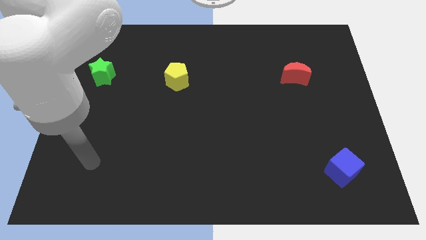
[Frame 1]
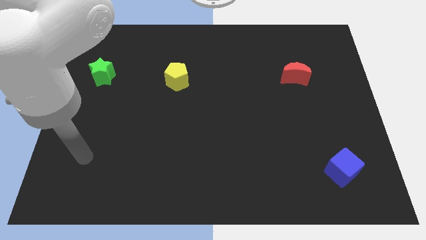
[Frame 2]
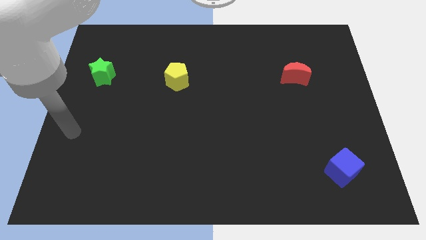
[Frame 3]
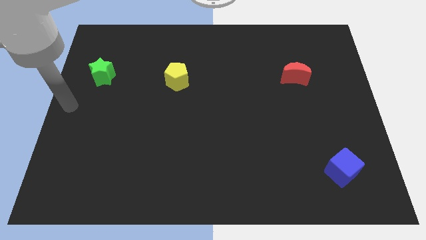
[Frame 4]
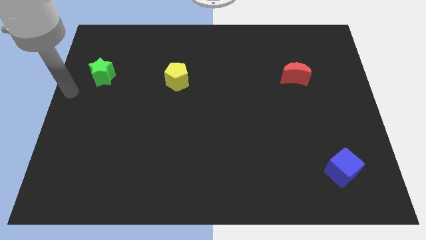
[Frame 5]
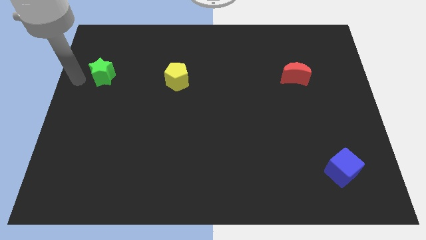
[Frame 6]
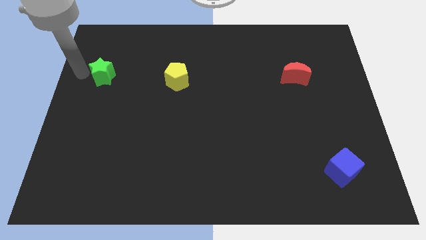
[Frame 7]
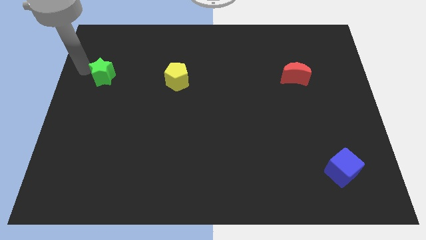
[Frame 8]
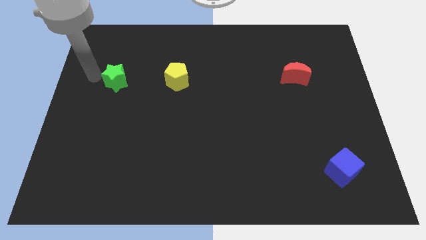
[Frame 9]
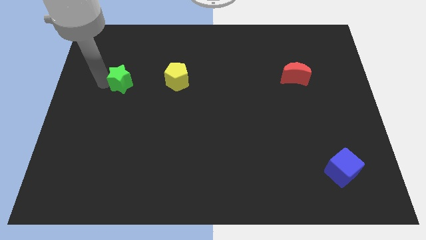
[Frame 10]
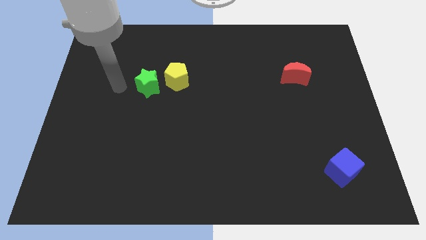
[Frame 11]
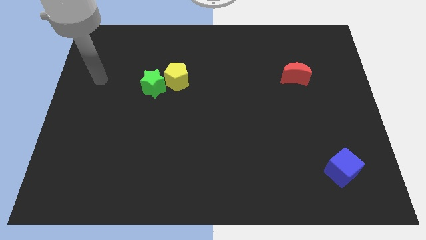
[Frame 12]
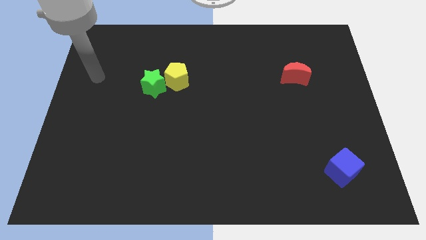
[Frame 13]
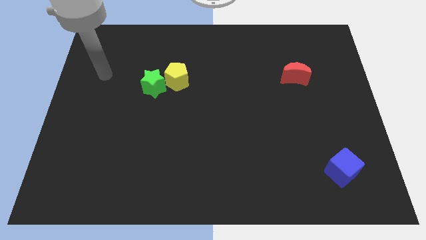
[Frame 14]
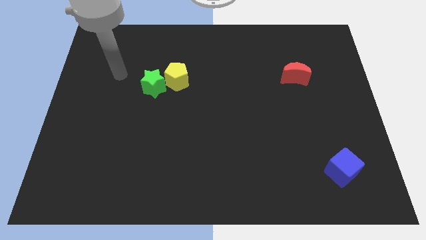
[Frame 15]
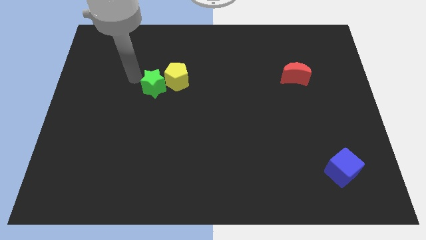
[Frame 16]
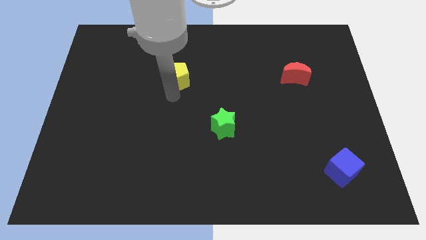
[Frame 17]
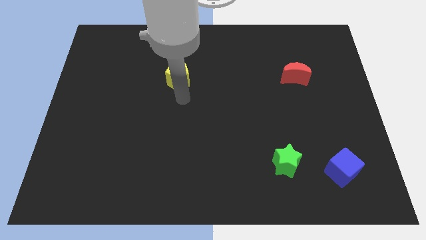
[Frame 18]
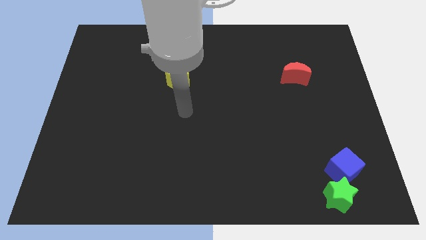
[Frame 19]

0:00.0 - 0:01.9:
slide the green star close to the cube

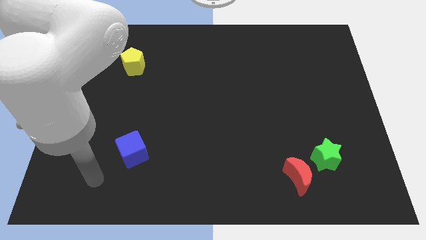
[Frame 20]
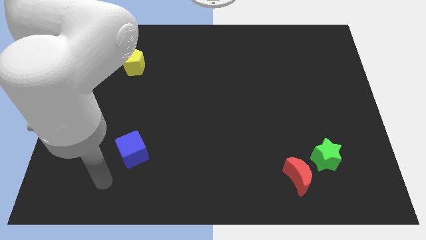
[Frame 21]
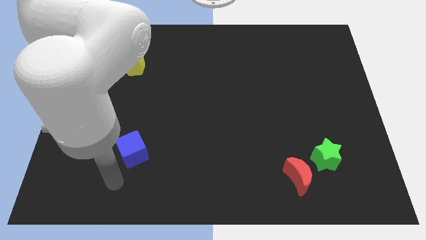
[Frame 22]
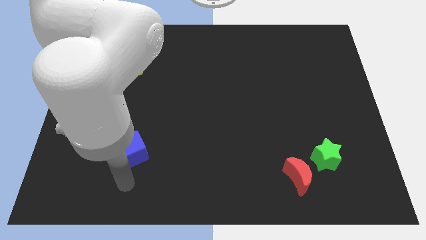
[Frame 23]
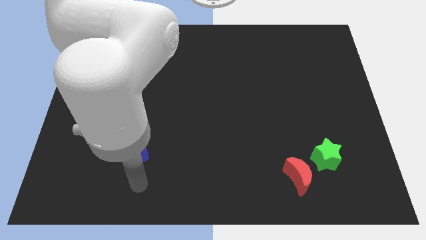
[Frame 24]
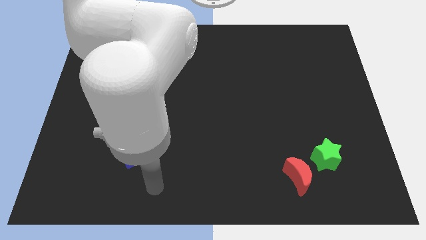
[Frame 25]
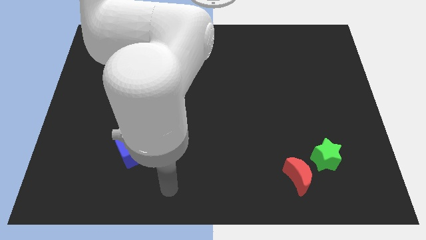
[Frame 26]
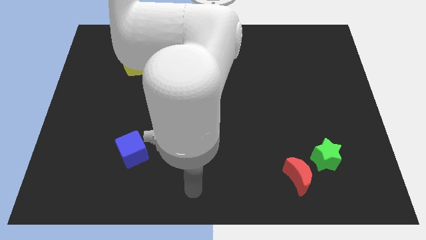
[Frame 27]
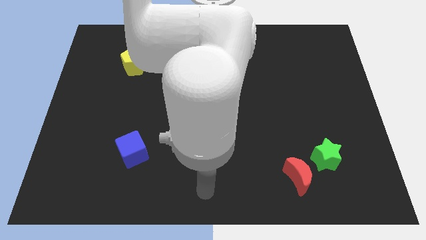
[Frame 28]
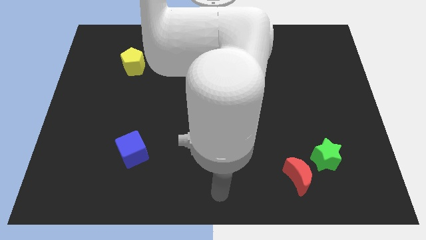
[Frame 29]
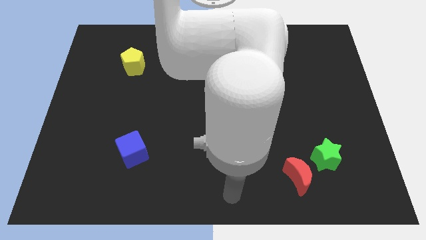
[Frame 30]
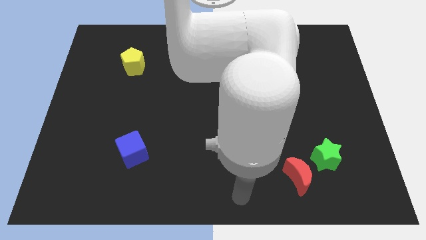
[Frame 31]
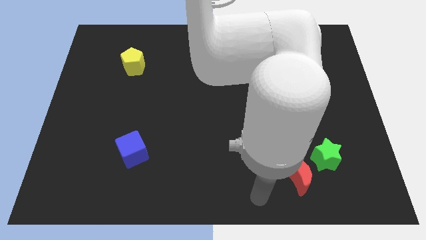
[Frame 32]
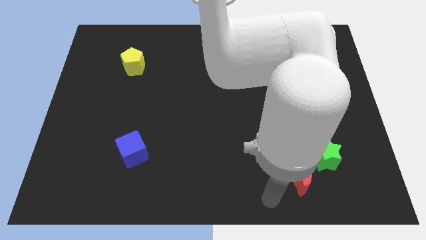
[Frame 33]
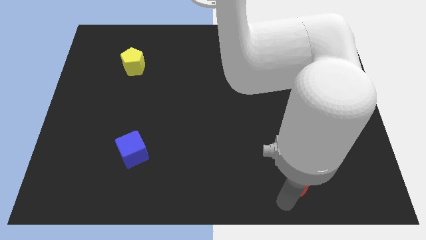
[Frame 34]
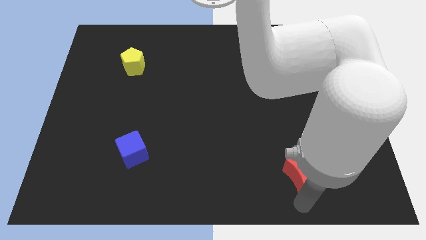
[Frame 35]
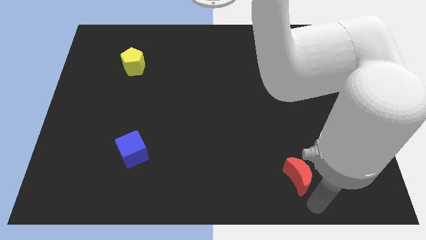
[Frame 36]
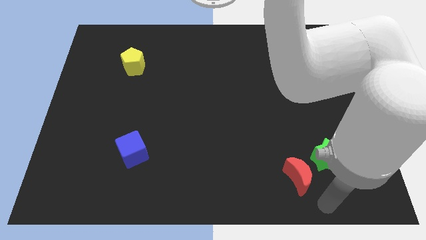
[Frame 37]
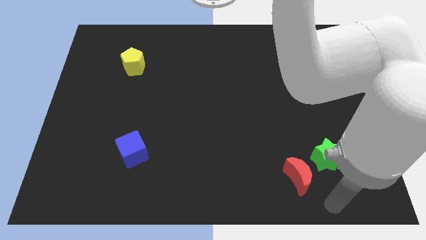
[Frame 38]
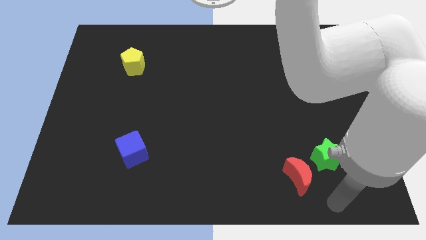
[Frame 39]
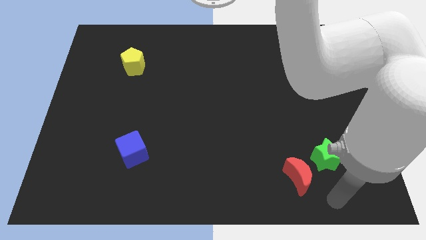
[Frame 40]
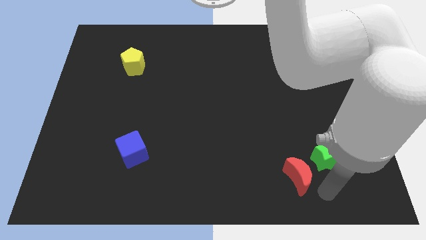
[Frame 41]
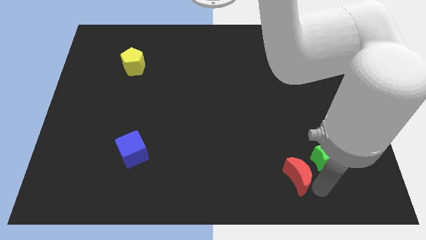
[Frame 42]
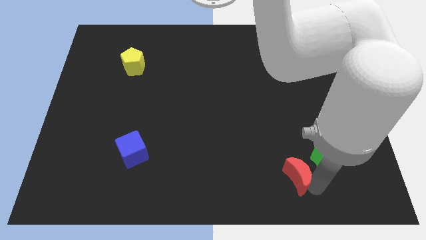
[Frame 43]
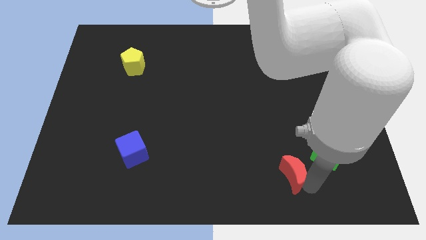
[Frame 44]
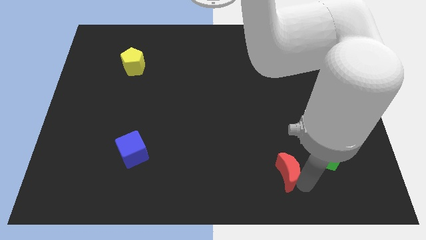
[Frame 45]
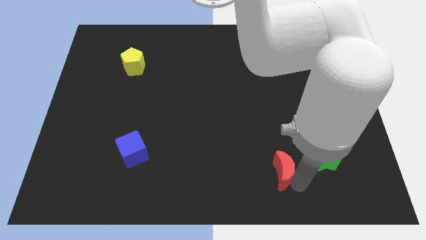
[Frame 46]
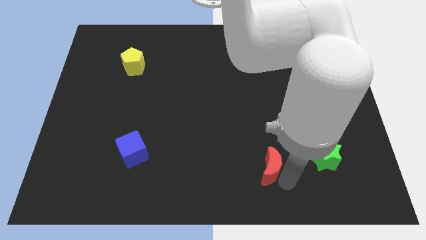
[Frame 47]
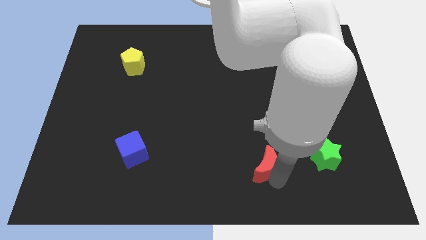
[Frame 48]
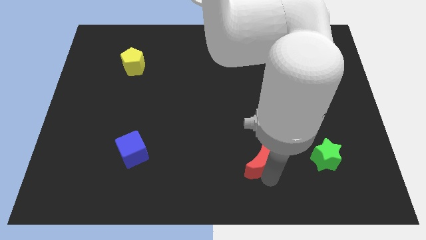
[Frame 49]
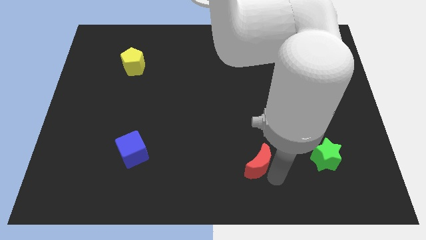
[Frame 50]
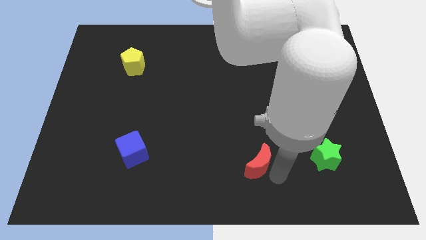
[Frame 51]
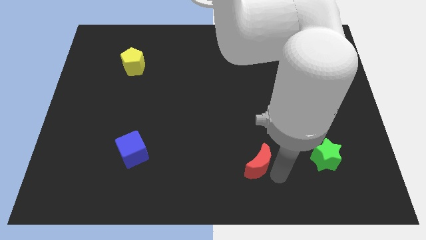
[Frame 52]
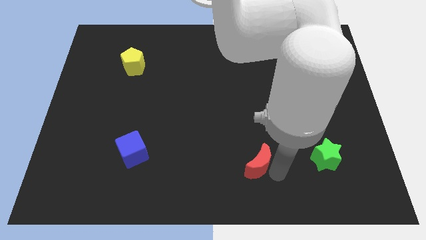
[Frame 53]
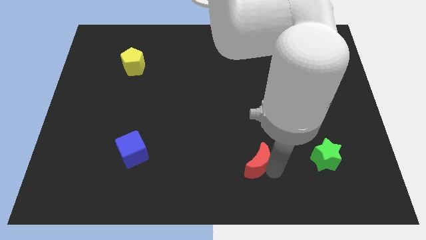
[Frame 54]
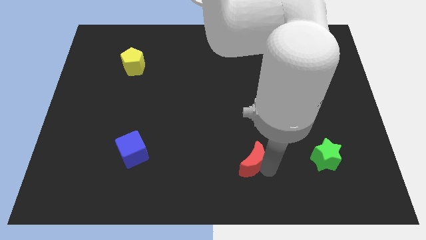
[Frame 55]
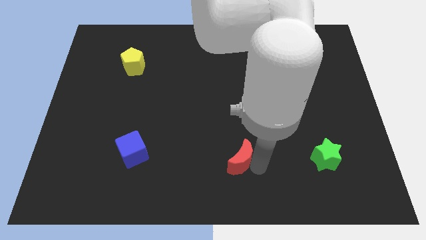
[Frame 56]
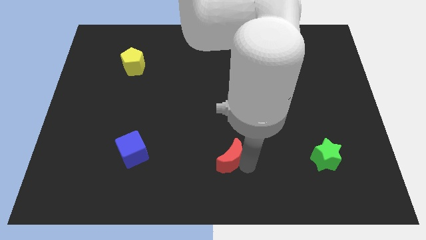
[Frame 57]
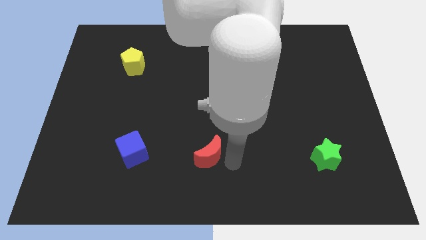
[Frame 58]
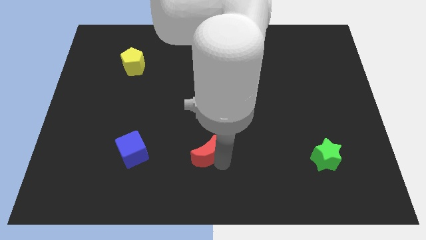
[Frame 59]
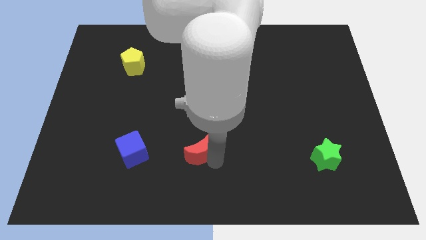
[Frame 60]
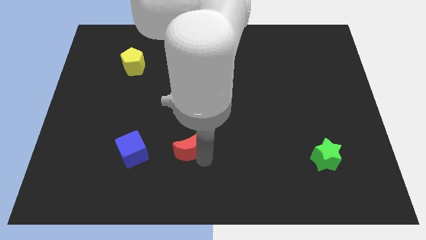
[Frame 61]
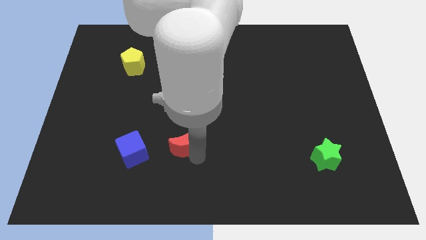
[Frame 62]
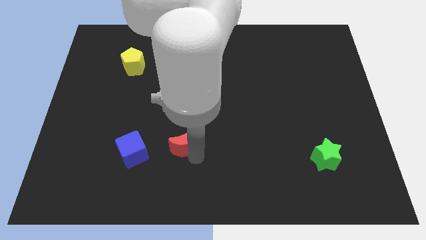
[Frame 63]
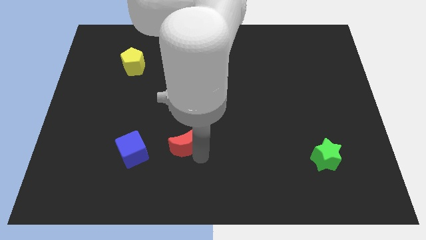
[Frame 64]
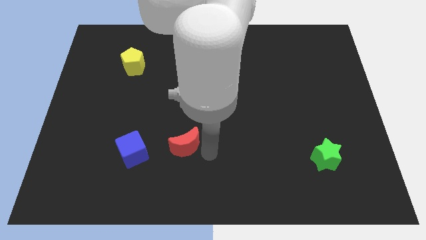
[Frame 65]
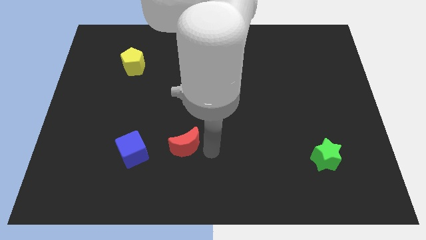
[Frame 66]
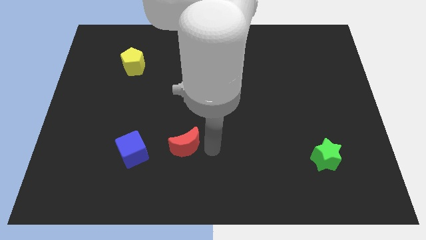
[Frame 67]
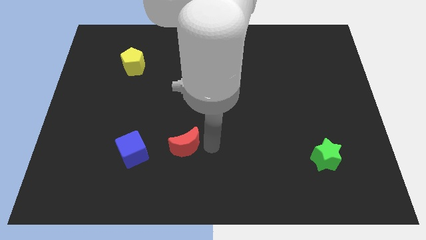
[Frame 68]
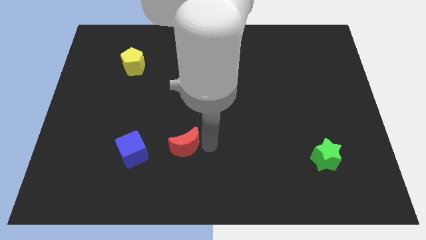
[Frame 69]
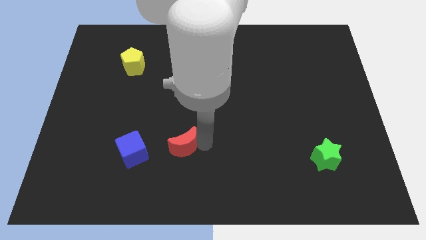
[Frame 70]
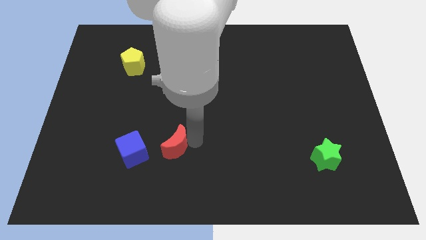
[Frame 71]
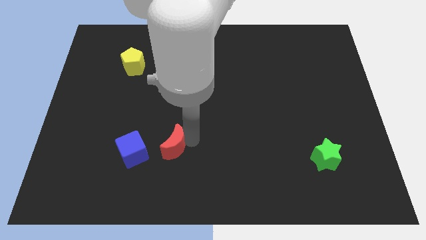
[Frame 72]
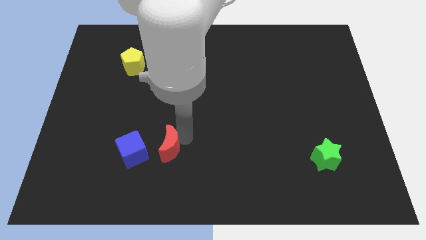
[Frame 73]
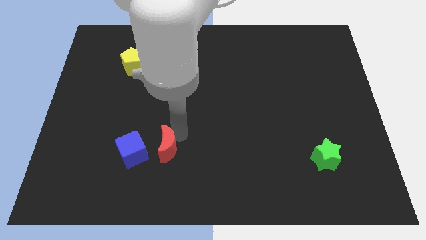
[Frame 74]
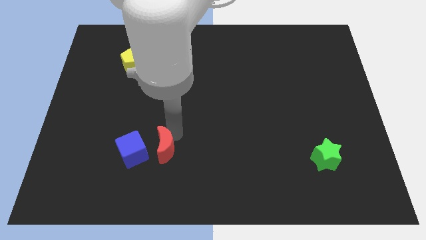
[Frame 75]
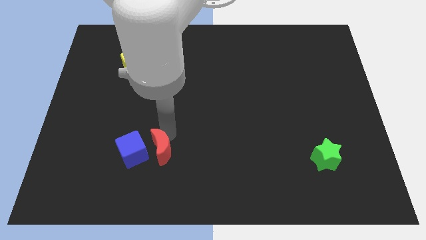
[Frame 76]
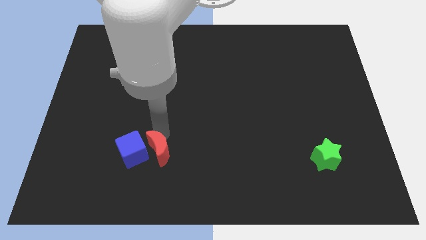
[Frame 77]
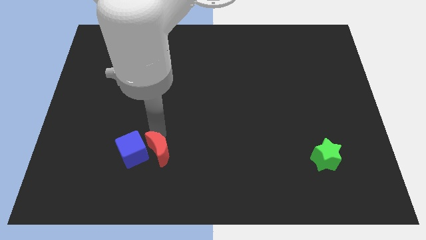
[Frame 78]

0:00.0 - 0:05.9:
put the moon next to the blue block

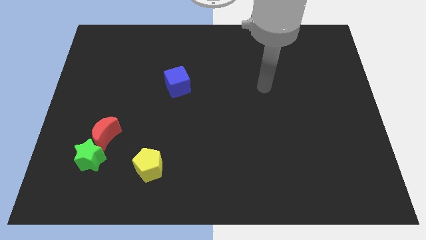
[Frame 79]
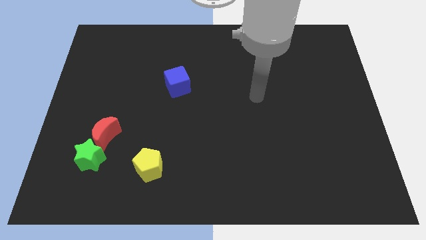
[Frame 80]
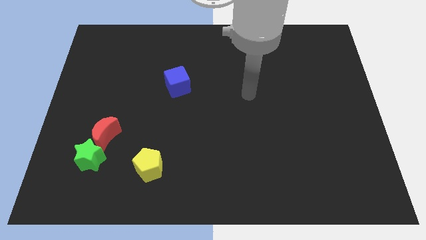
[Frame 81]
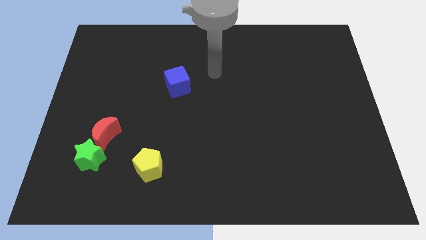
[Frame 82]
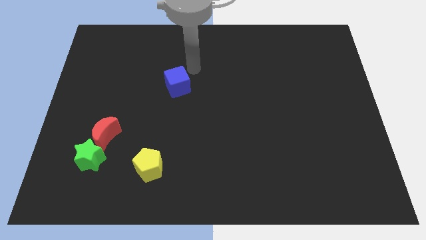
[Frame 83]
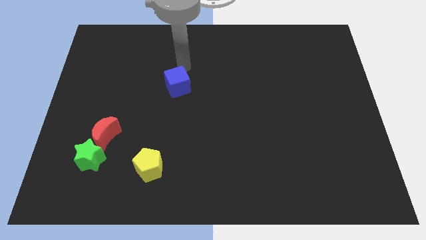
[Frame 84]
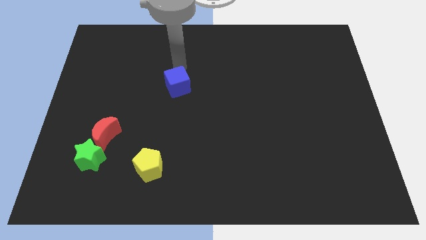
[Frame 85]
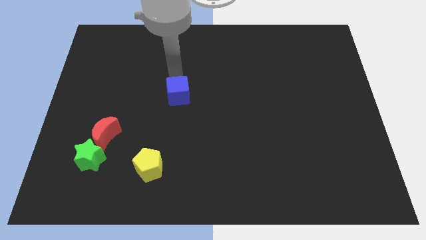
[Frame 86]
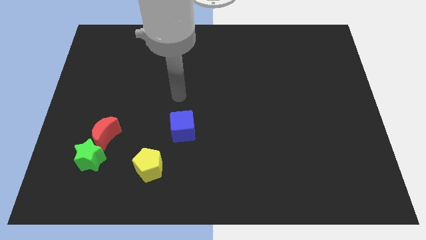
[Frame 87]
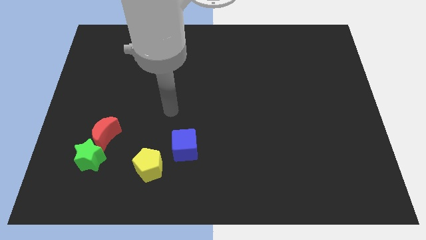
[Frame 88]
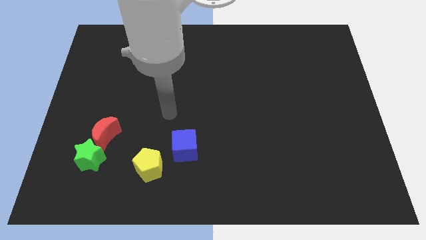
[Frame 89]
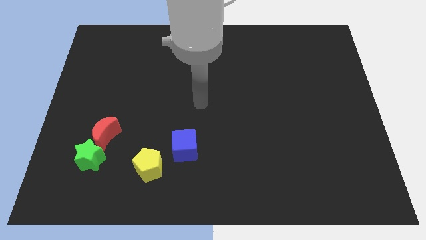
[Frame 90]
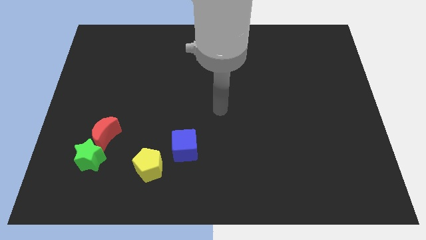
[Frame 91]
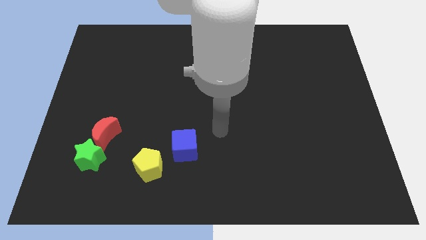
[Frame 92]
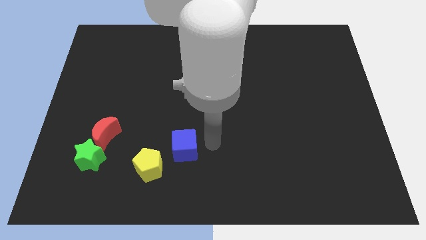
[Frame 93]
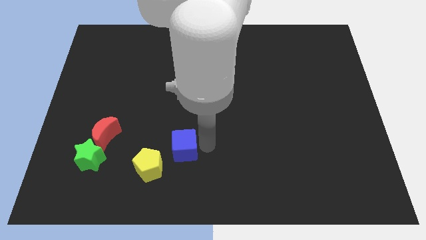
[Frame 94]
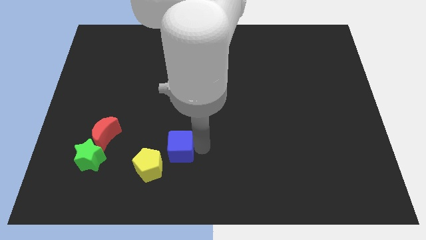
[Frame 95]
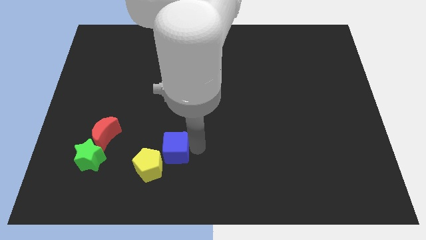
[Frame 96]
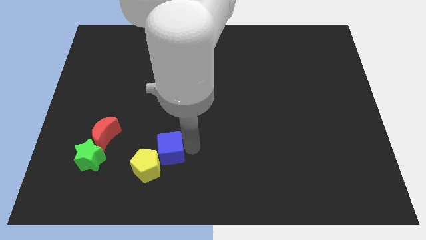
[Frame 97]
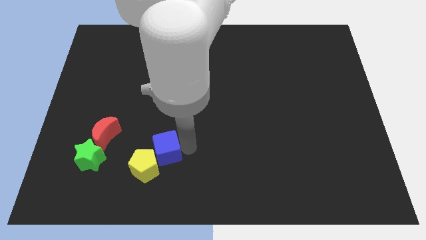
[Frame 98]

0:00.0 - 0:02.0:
put the blue block to the yellow block
